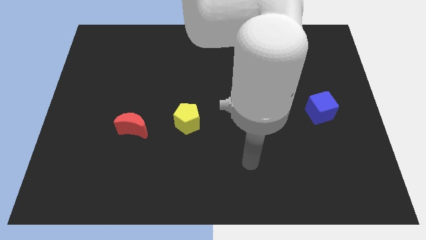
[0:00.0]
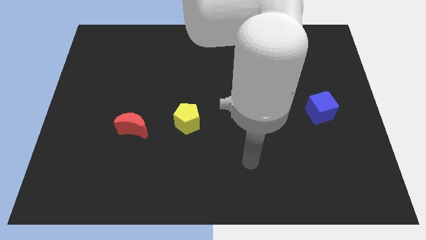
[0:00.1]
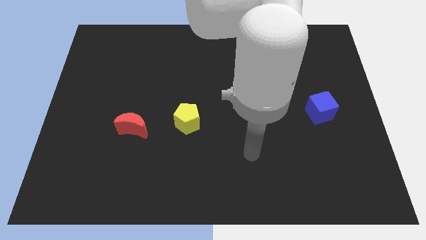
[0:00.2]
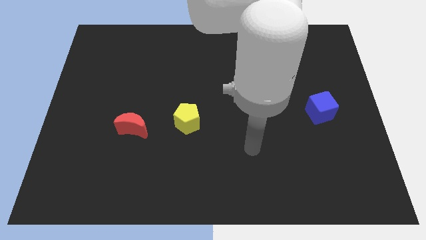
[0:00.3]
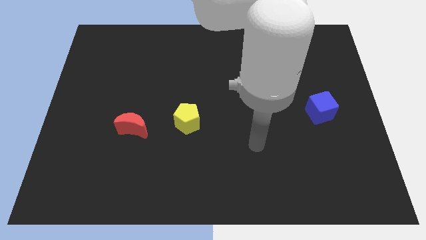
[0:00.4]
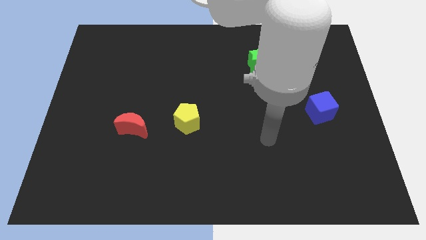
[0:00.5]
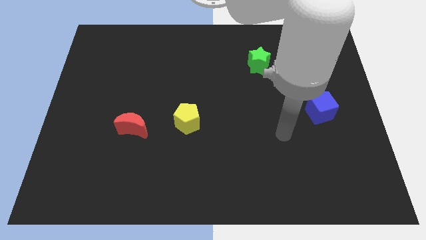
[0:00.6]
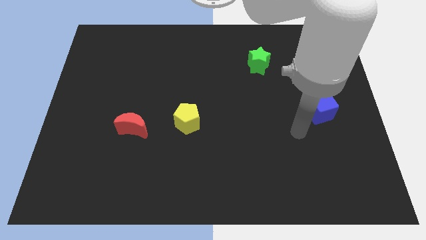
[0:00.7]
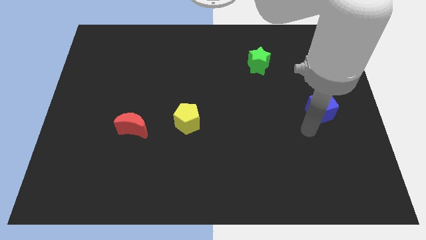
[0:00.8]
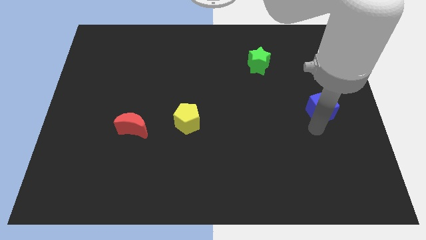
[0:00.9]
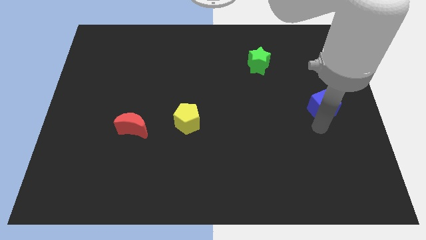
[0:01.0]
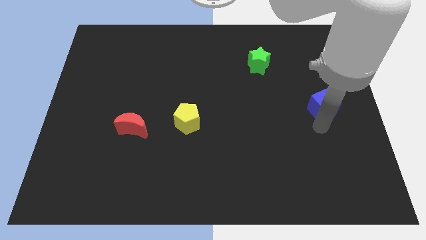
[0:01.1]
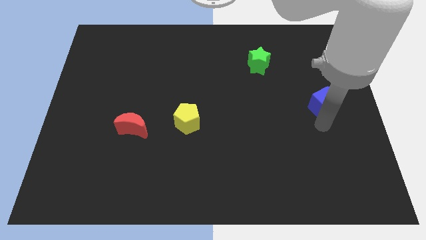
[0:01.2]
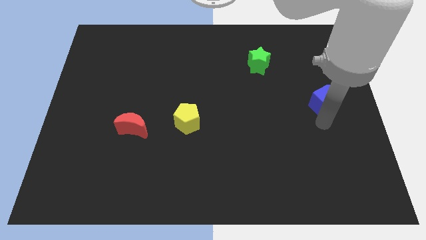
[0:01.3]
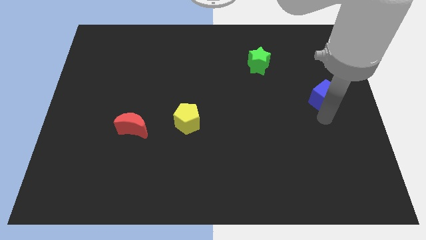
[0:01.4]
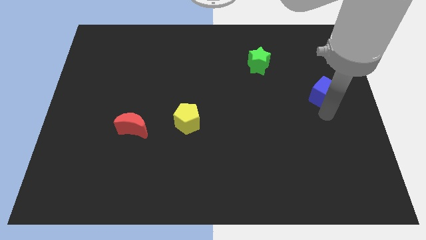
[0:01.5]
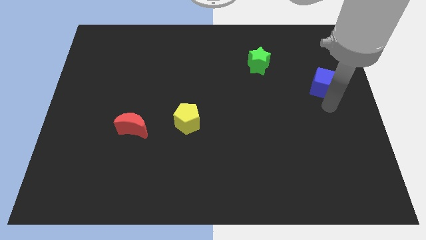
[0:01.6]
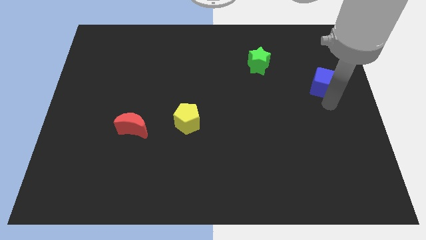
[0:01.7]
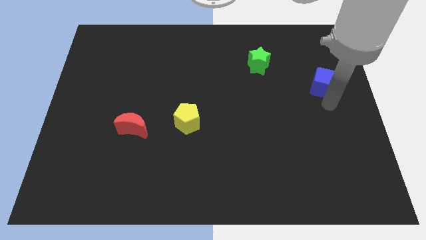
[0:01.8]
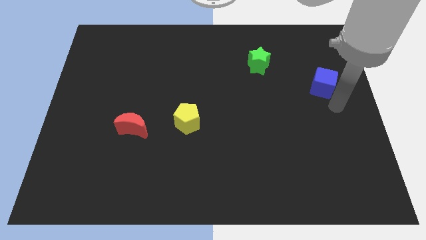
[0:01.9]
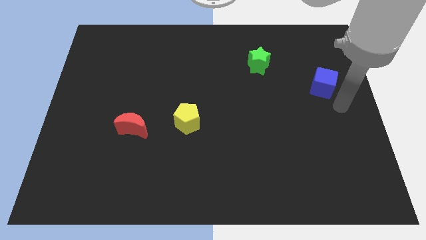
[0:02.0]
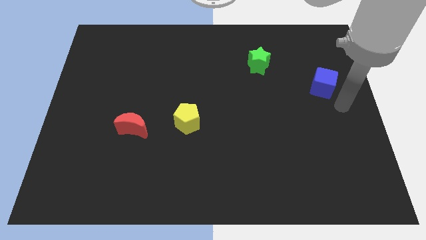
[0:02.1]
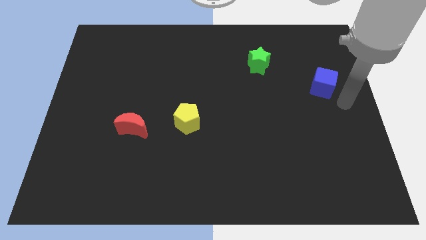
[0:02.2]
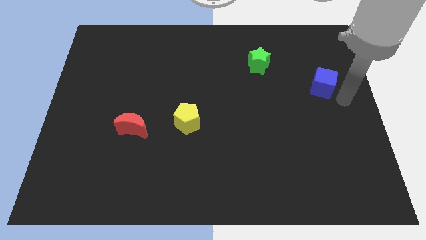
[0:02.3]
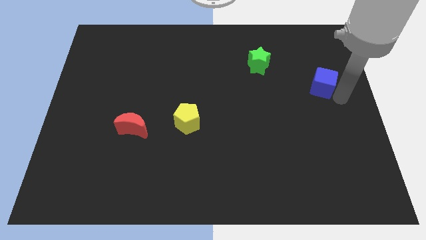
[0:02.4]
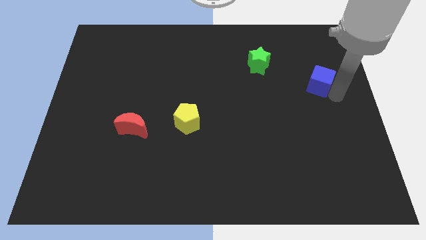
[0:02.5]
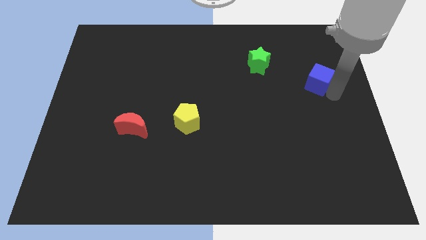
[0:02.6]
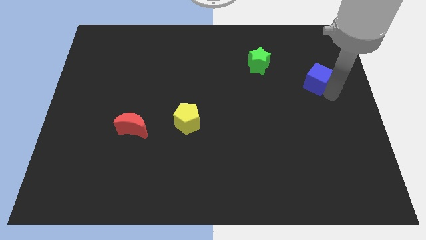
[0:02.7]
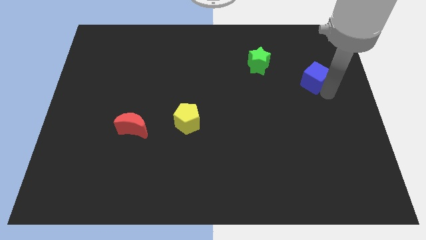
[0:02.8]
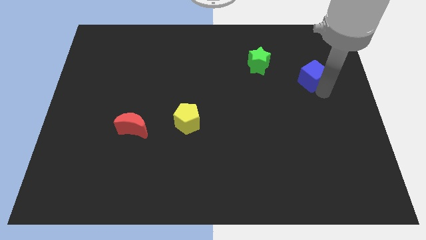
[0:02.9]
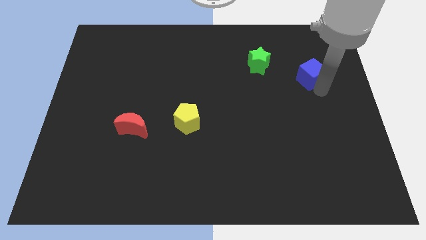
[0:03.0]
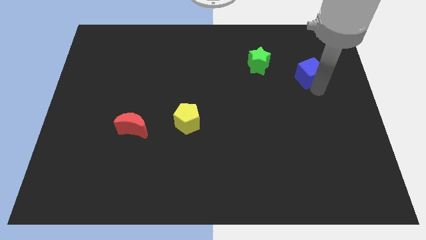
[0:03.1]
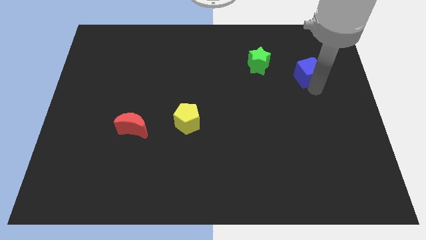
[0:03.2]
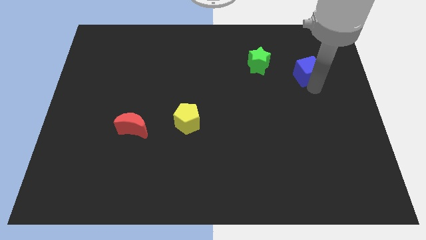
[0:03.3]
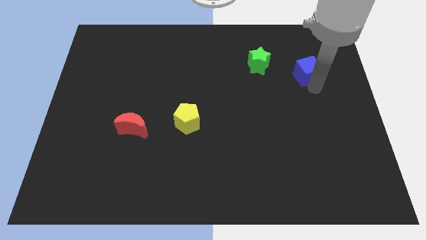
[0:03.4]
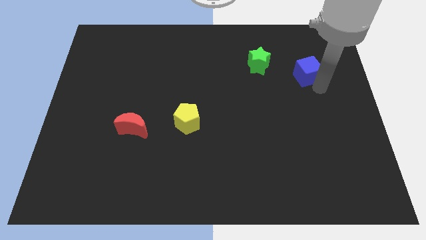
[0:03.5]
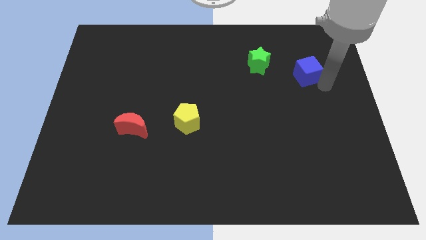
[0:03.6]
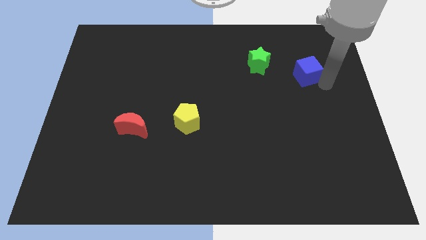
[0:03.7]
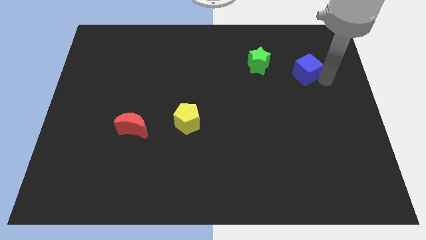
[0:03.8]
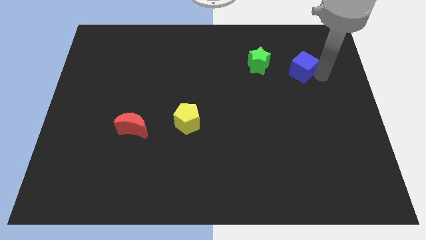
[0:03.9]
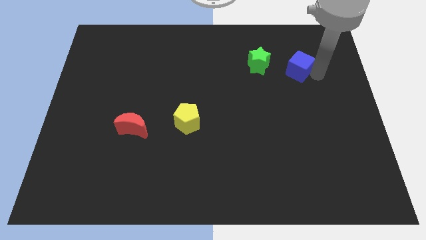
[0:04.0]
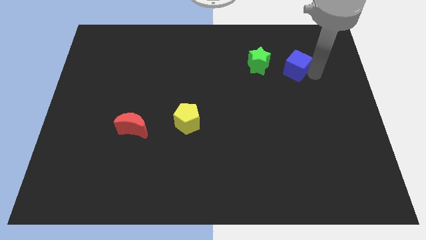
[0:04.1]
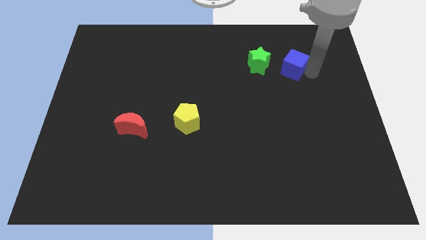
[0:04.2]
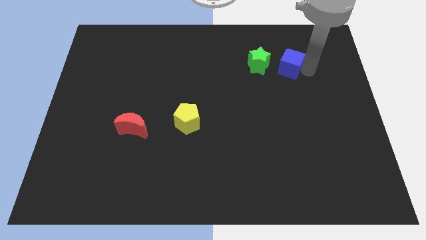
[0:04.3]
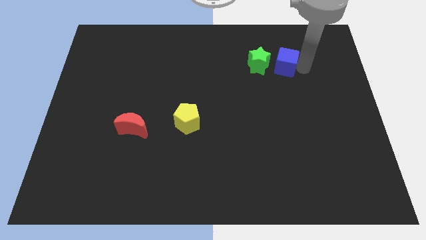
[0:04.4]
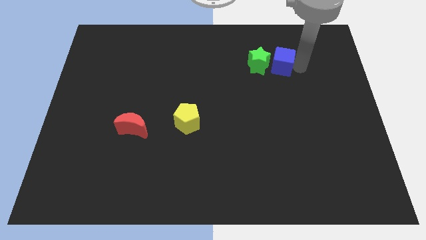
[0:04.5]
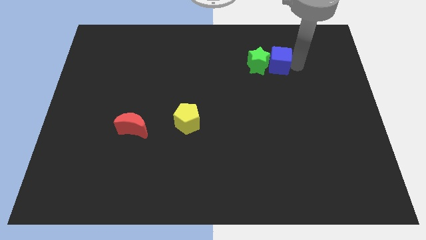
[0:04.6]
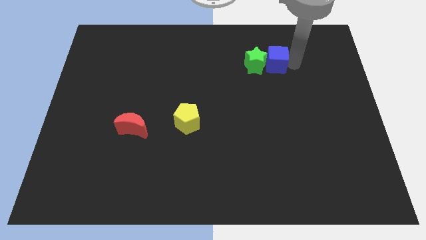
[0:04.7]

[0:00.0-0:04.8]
put the blue block close to the green block

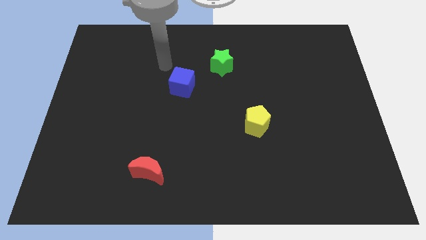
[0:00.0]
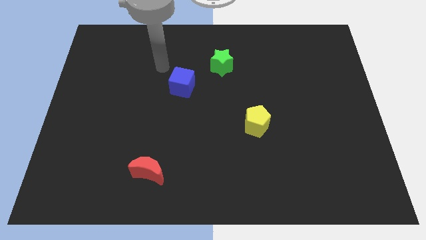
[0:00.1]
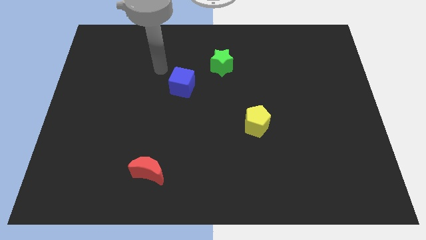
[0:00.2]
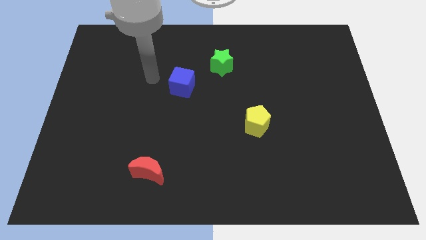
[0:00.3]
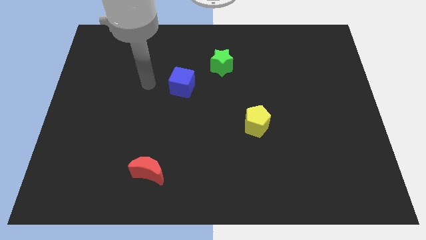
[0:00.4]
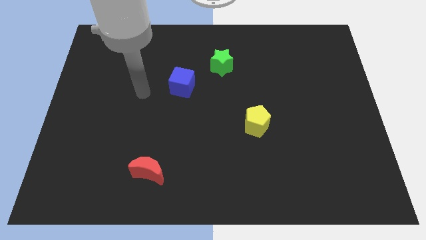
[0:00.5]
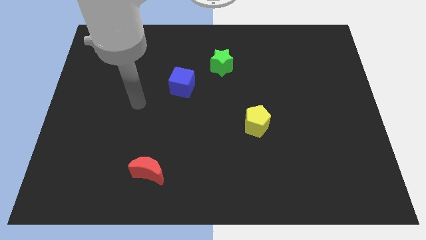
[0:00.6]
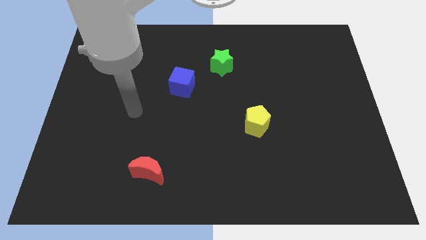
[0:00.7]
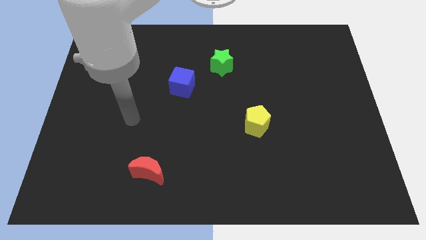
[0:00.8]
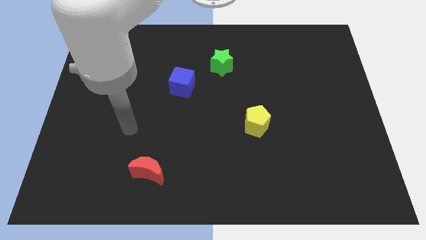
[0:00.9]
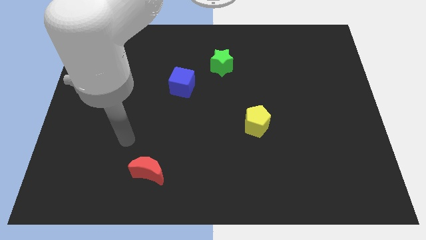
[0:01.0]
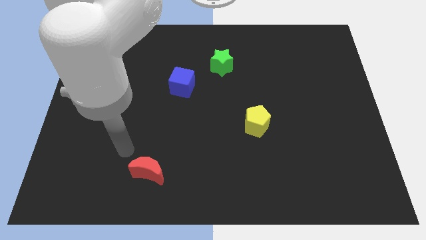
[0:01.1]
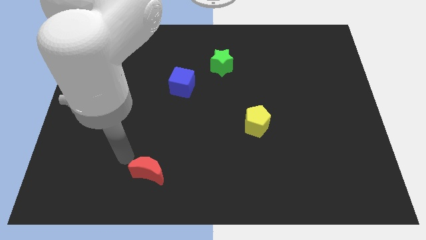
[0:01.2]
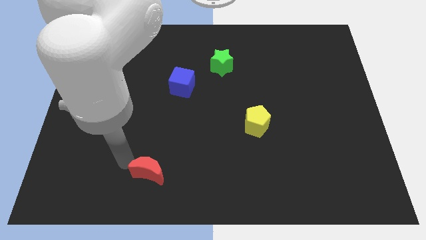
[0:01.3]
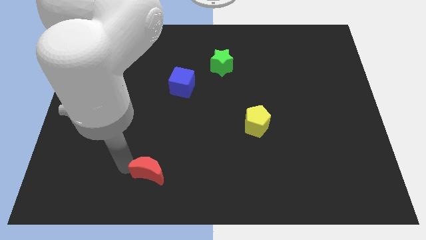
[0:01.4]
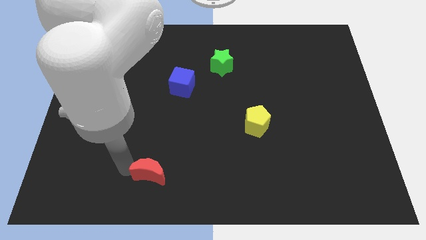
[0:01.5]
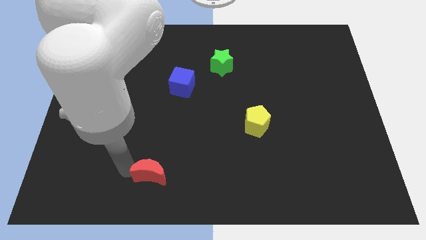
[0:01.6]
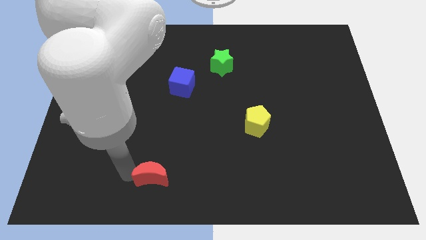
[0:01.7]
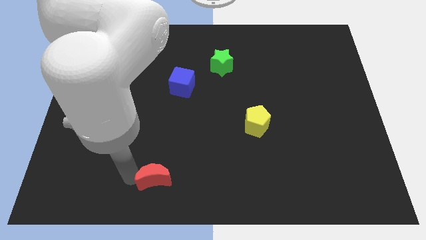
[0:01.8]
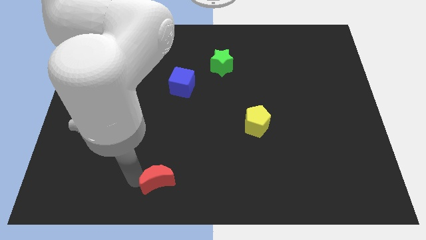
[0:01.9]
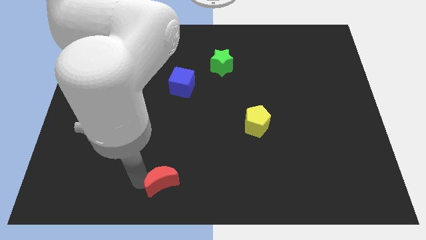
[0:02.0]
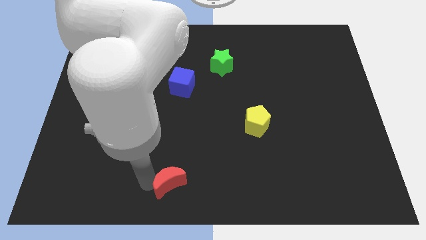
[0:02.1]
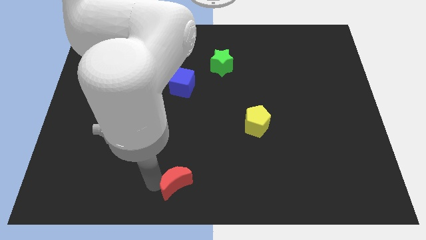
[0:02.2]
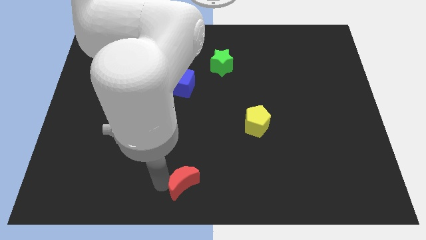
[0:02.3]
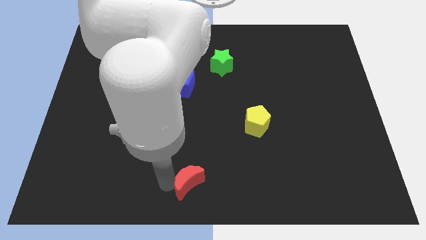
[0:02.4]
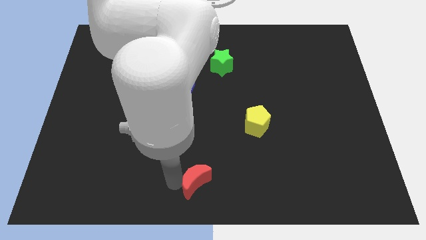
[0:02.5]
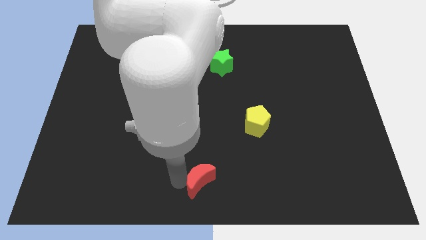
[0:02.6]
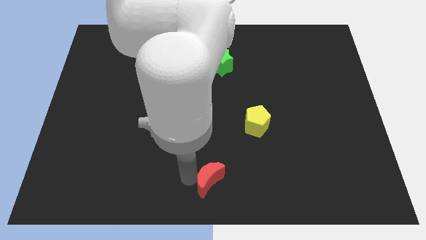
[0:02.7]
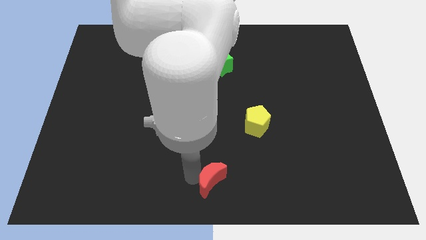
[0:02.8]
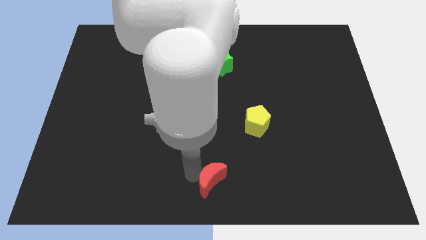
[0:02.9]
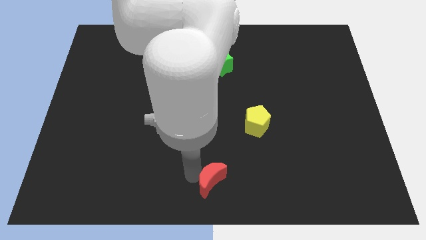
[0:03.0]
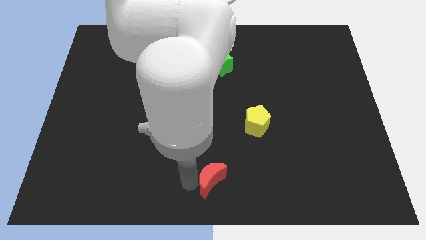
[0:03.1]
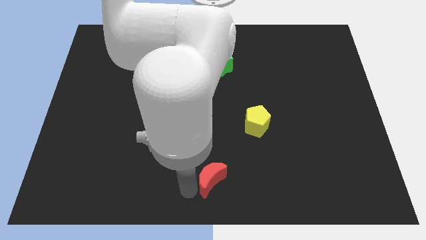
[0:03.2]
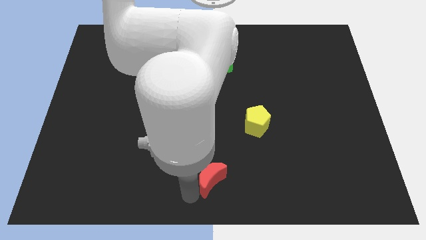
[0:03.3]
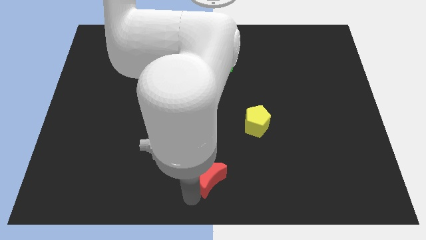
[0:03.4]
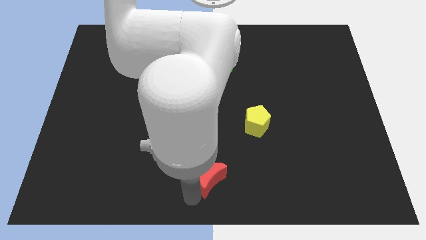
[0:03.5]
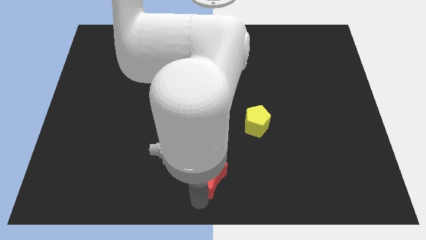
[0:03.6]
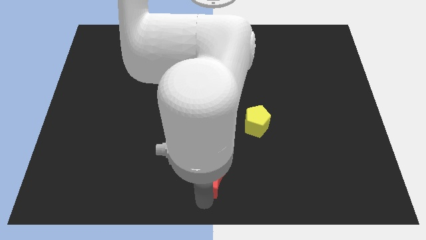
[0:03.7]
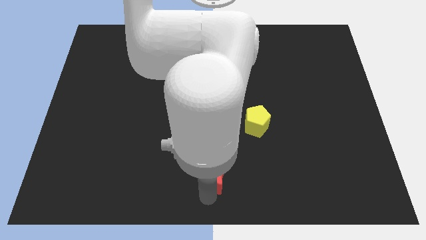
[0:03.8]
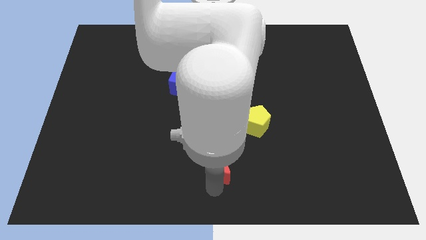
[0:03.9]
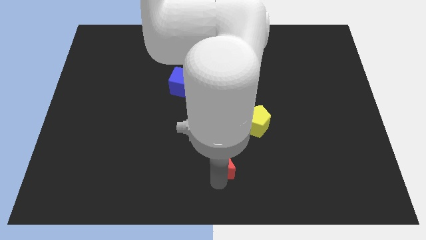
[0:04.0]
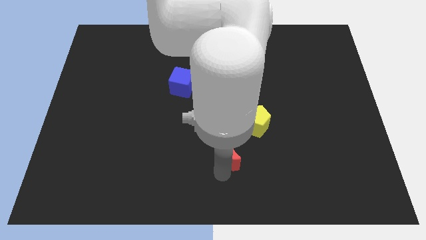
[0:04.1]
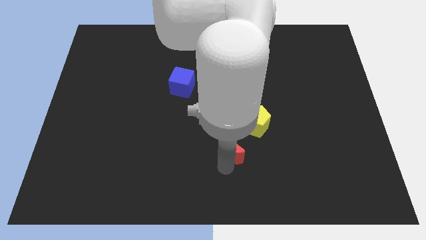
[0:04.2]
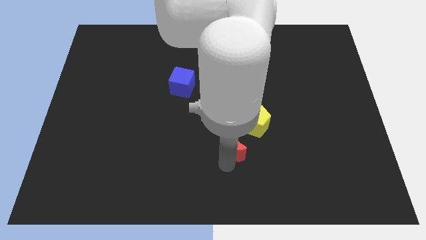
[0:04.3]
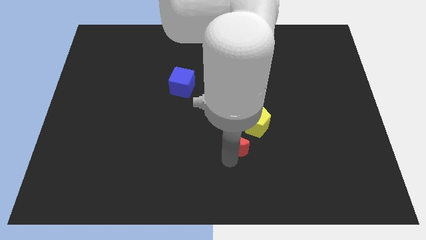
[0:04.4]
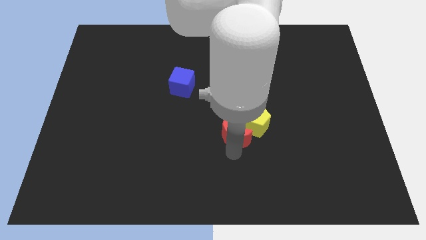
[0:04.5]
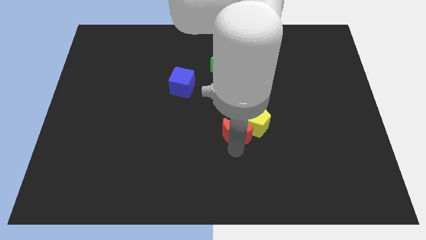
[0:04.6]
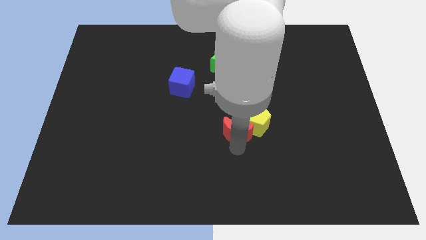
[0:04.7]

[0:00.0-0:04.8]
put the red moon next to the yellow pentagon
